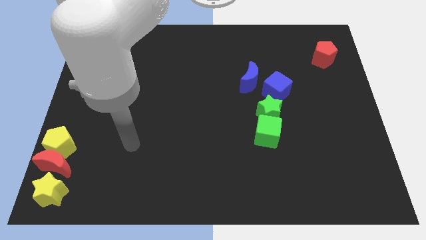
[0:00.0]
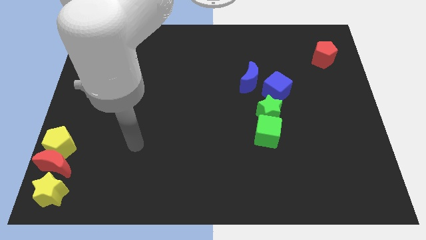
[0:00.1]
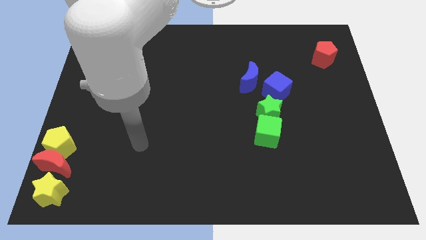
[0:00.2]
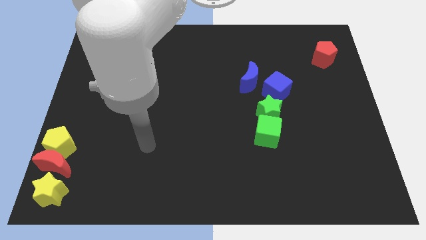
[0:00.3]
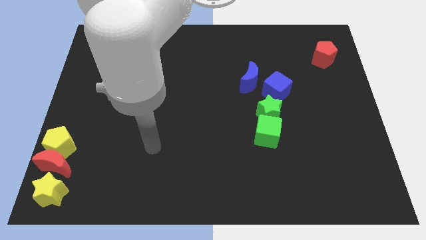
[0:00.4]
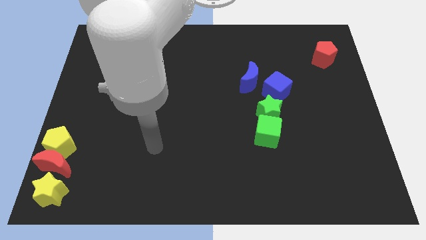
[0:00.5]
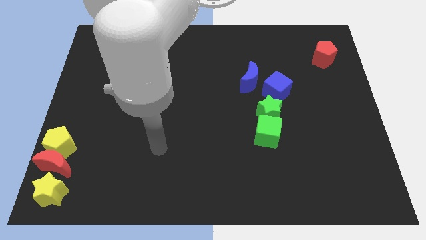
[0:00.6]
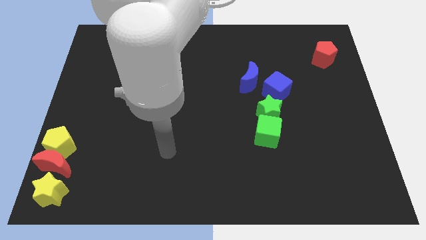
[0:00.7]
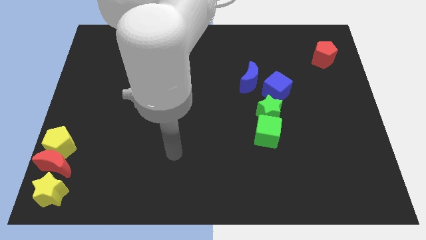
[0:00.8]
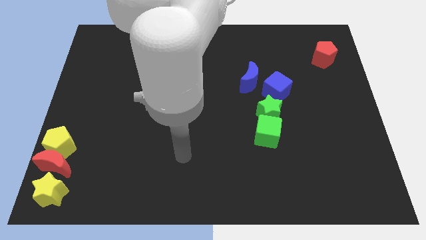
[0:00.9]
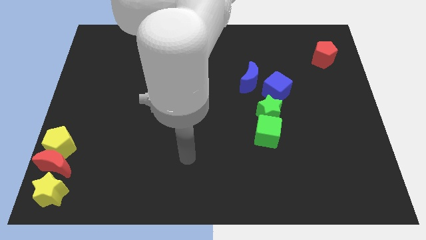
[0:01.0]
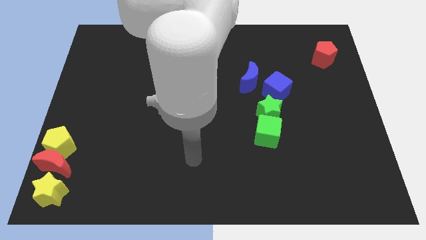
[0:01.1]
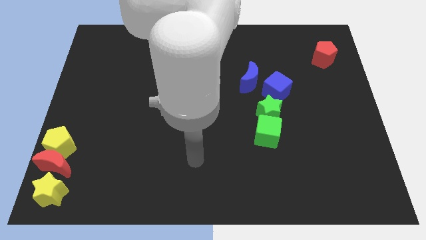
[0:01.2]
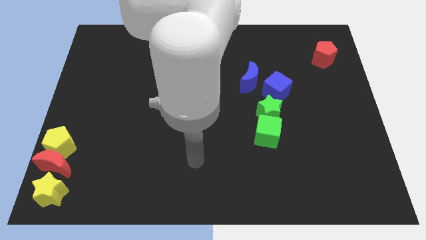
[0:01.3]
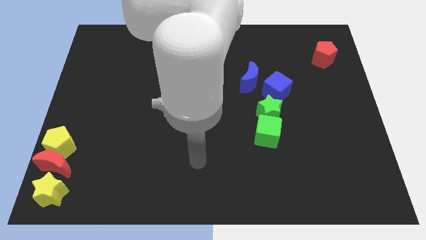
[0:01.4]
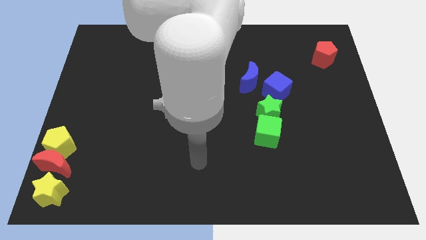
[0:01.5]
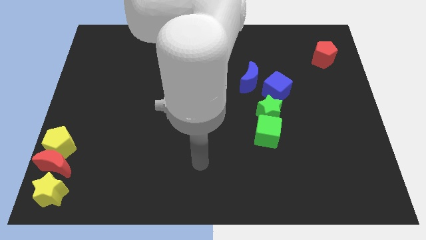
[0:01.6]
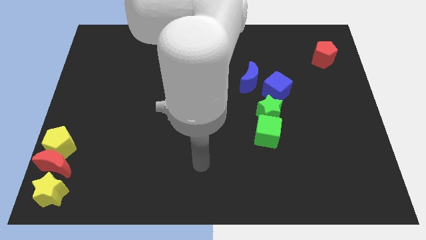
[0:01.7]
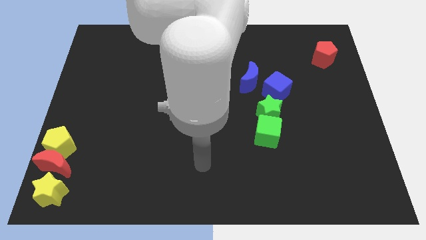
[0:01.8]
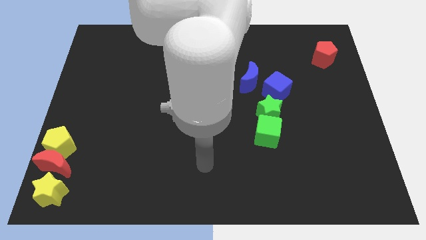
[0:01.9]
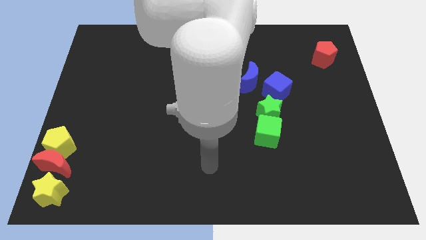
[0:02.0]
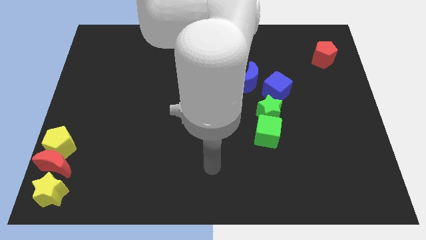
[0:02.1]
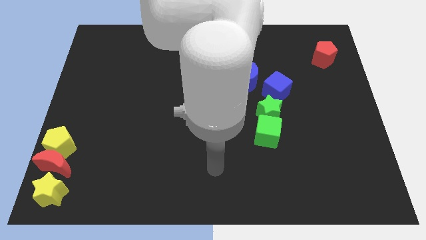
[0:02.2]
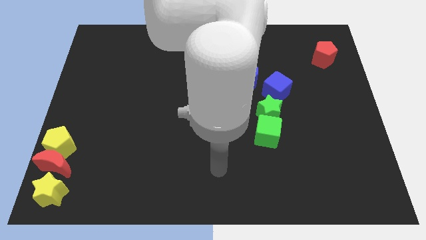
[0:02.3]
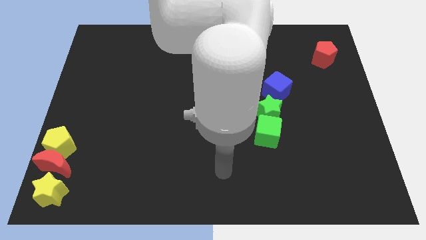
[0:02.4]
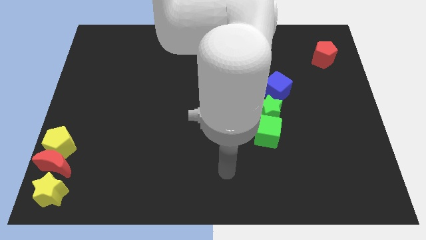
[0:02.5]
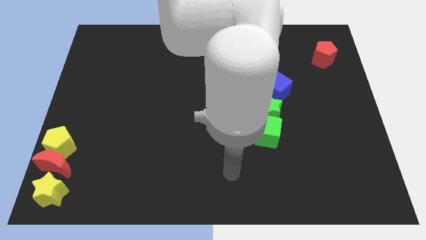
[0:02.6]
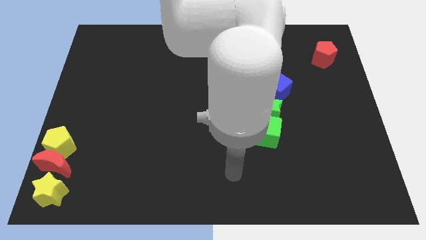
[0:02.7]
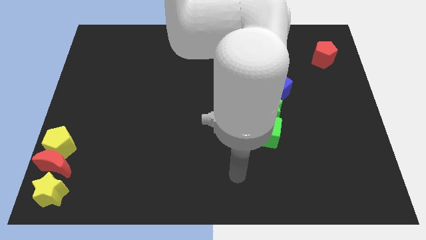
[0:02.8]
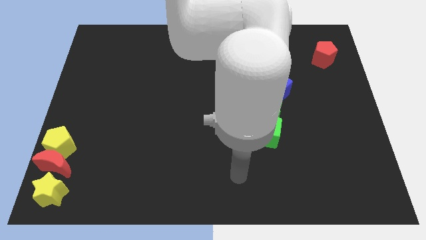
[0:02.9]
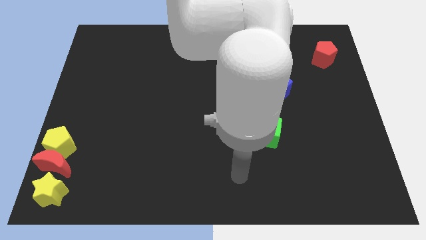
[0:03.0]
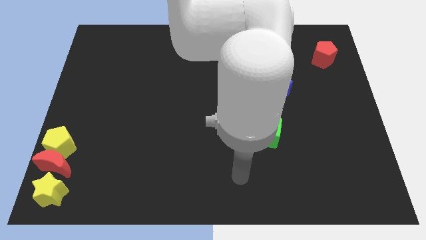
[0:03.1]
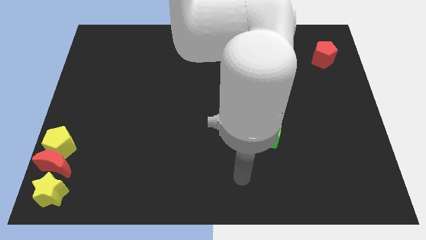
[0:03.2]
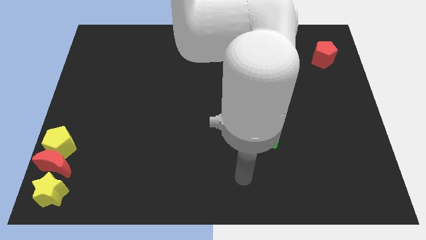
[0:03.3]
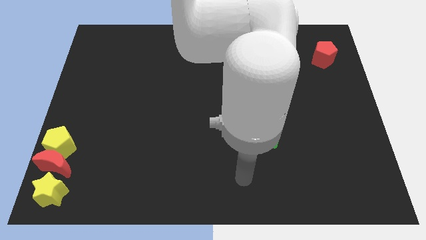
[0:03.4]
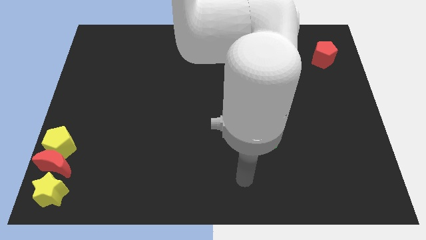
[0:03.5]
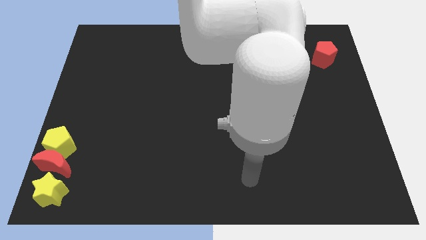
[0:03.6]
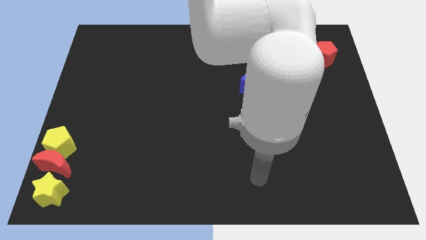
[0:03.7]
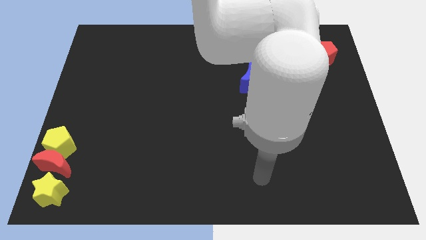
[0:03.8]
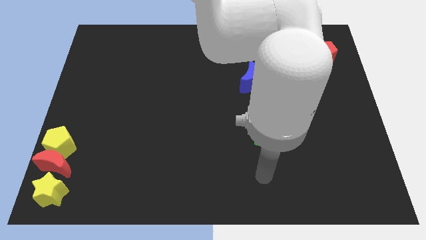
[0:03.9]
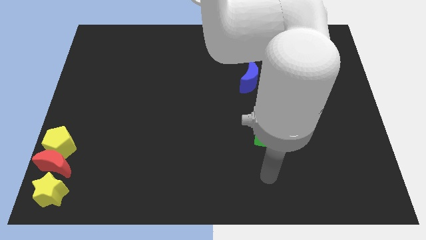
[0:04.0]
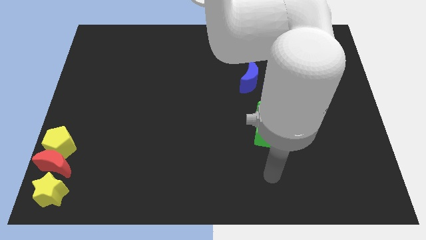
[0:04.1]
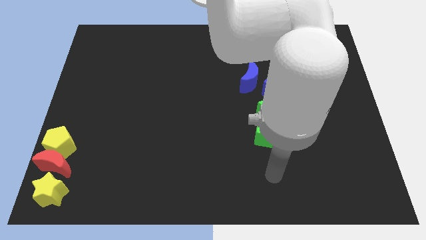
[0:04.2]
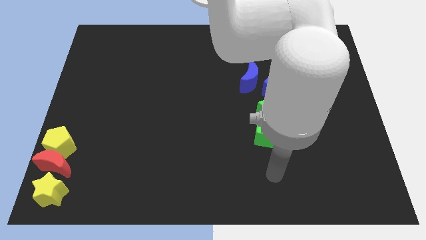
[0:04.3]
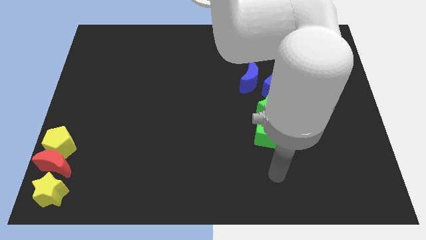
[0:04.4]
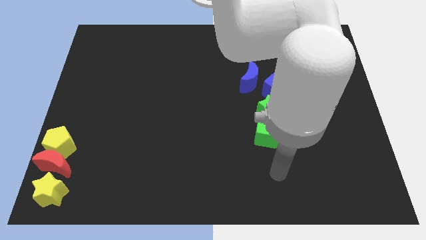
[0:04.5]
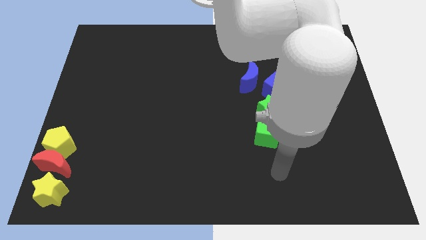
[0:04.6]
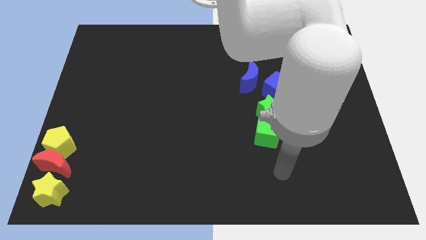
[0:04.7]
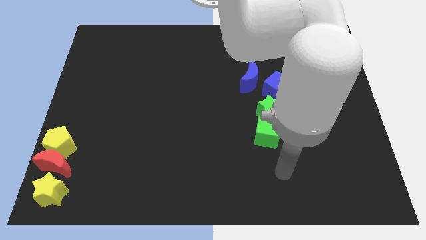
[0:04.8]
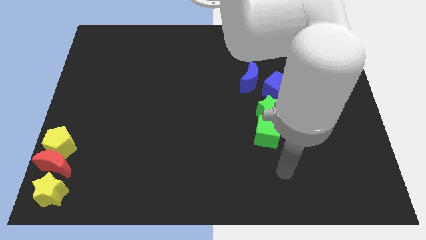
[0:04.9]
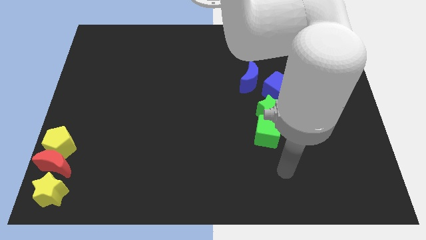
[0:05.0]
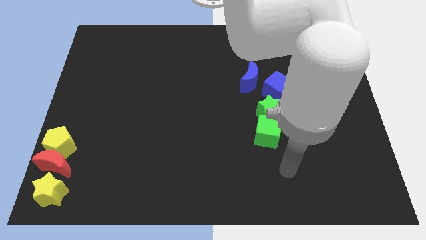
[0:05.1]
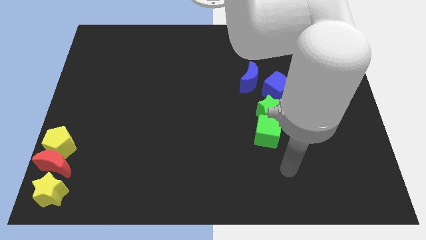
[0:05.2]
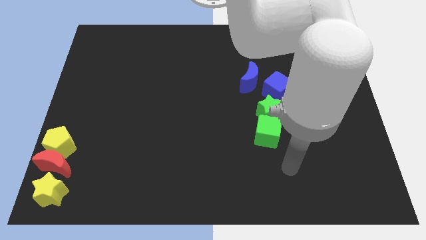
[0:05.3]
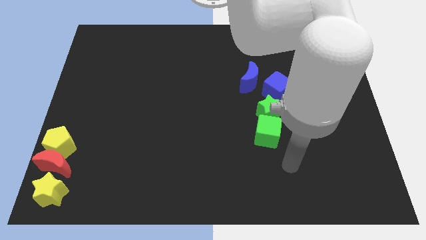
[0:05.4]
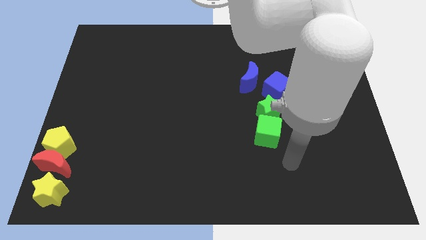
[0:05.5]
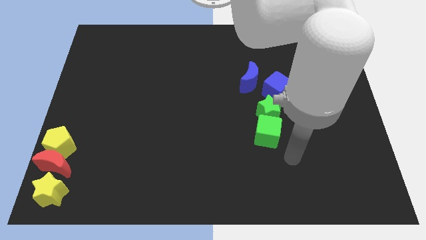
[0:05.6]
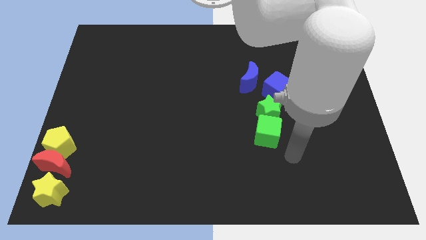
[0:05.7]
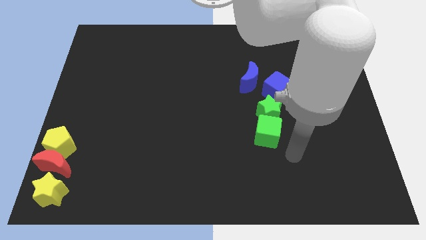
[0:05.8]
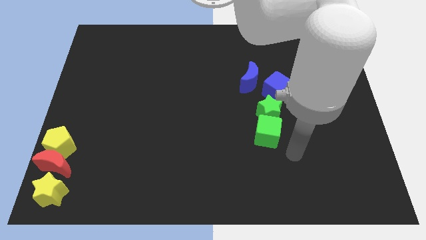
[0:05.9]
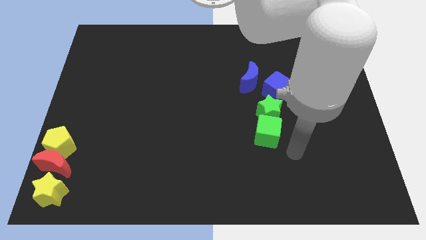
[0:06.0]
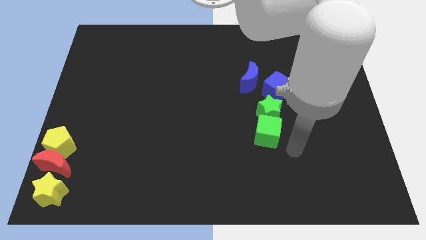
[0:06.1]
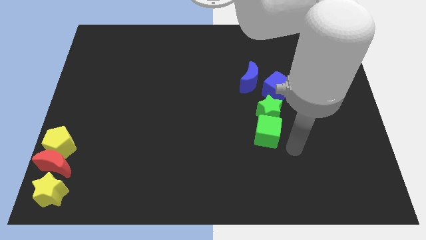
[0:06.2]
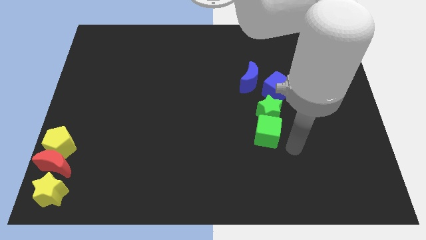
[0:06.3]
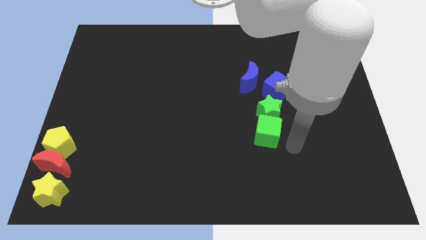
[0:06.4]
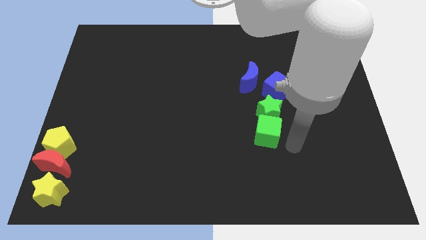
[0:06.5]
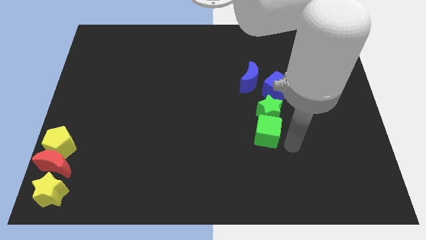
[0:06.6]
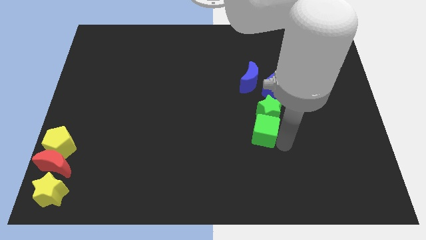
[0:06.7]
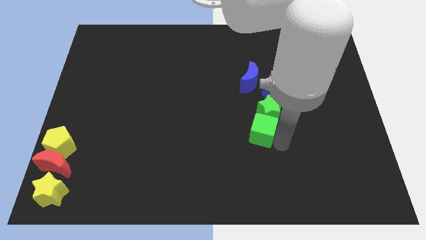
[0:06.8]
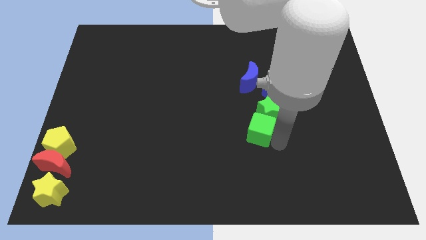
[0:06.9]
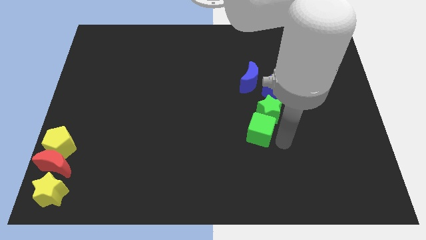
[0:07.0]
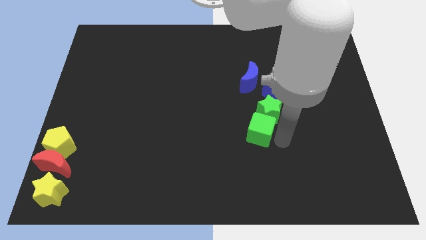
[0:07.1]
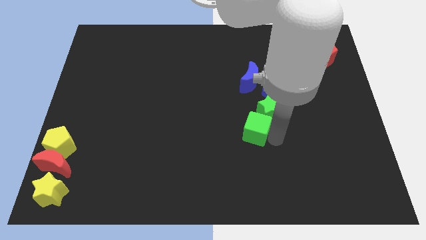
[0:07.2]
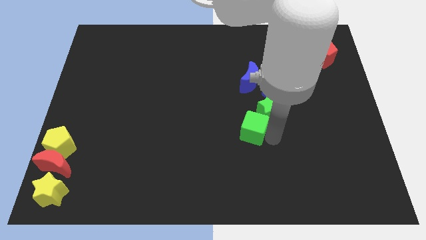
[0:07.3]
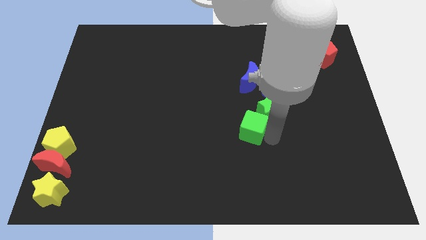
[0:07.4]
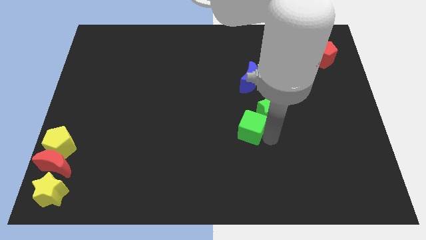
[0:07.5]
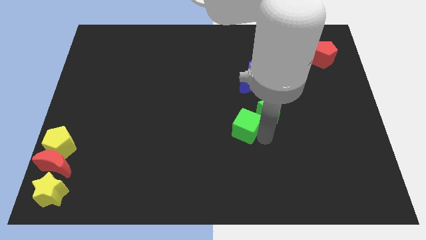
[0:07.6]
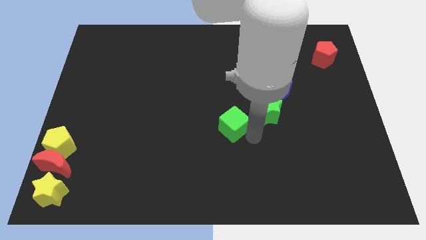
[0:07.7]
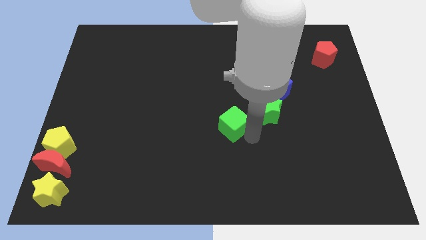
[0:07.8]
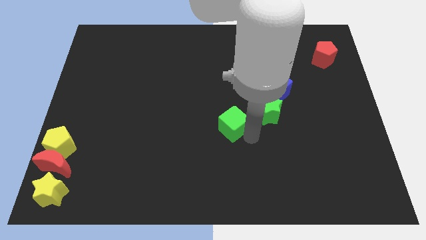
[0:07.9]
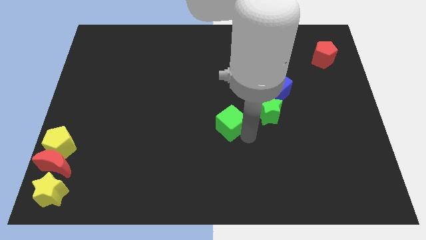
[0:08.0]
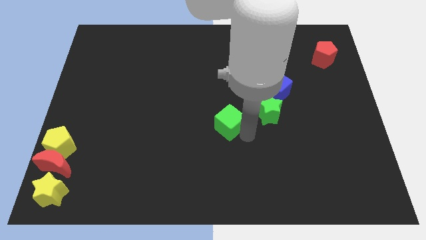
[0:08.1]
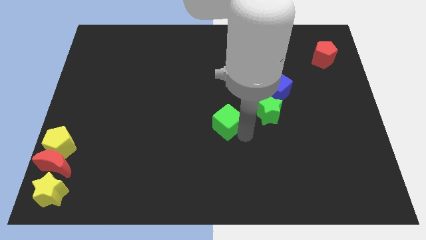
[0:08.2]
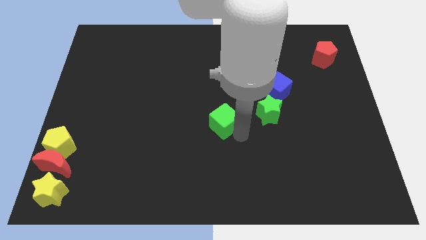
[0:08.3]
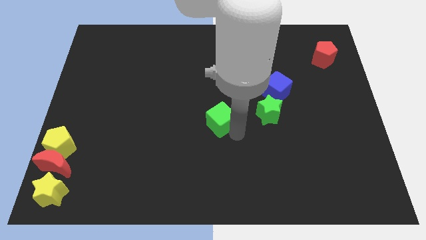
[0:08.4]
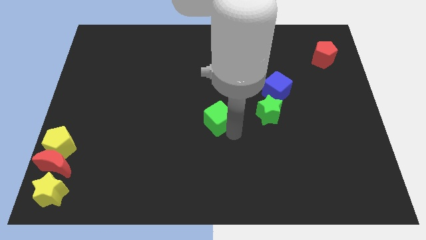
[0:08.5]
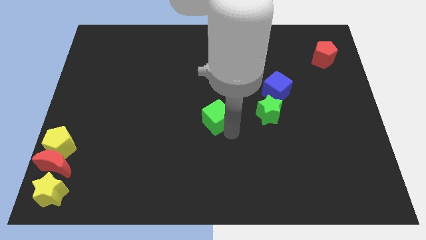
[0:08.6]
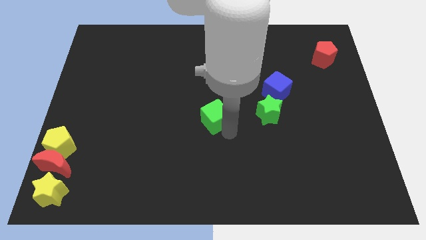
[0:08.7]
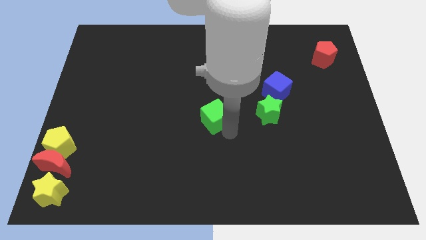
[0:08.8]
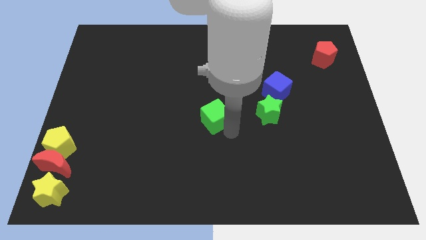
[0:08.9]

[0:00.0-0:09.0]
separate green cube and green star
